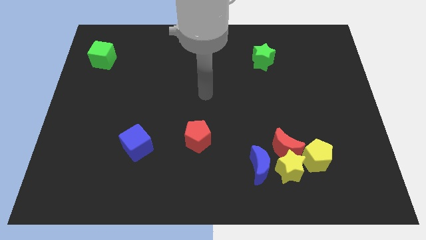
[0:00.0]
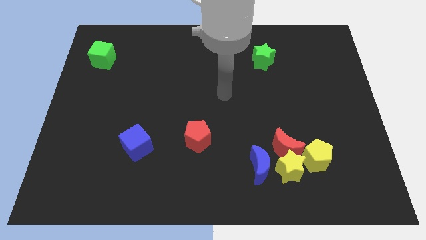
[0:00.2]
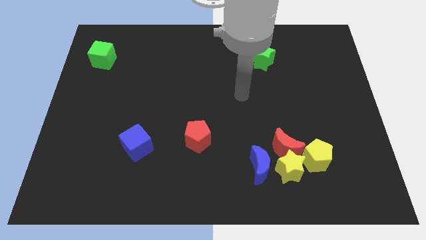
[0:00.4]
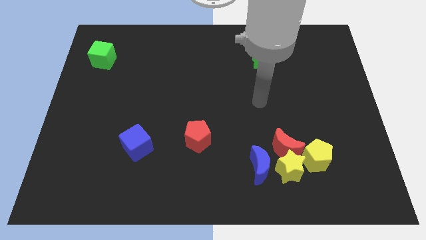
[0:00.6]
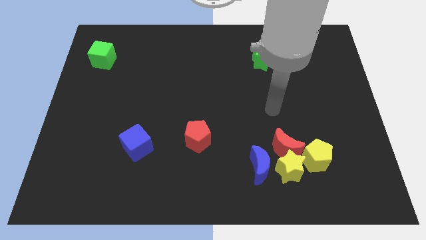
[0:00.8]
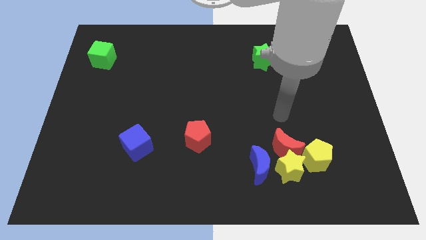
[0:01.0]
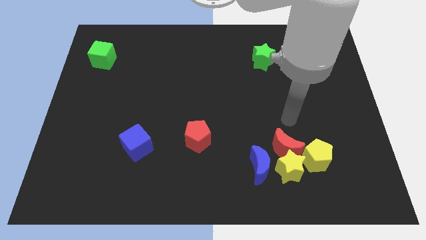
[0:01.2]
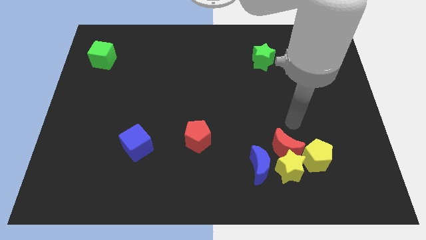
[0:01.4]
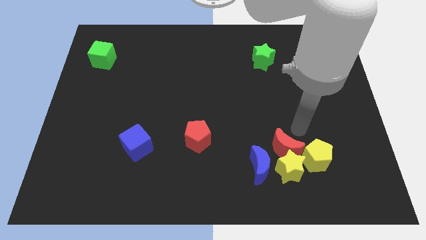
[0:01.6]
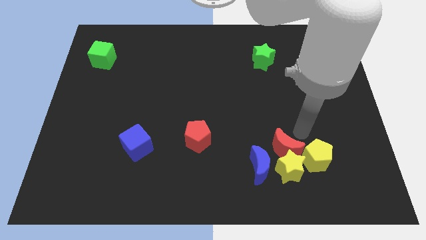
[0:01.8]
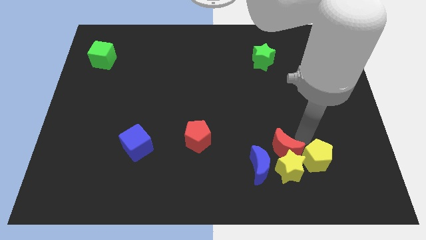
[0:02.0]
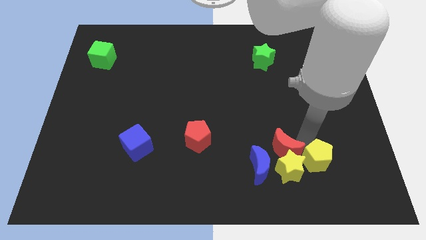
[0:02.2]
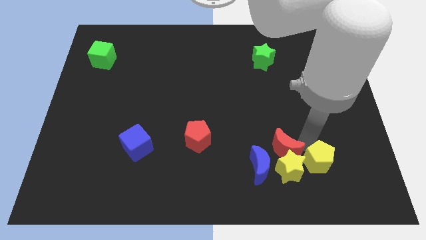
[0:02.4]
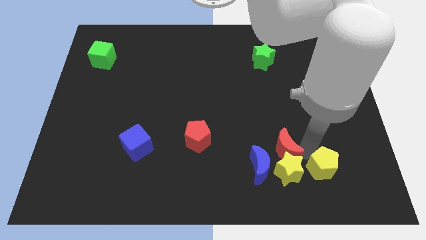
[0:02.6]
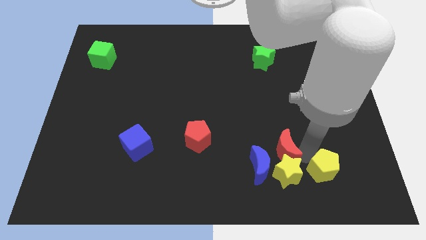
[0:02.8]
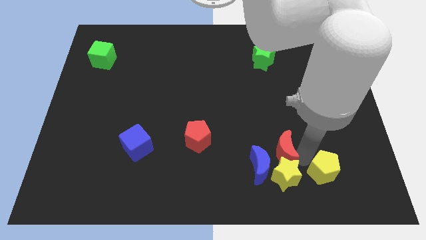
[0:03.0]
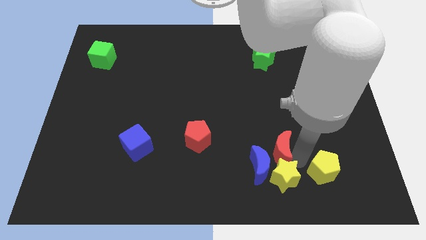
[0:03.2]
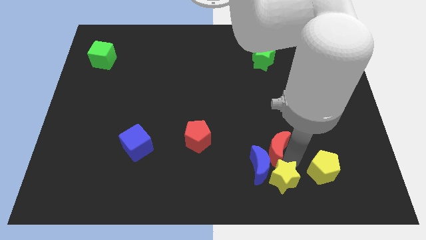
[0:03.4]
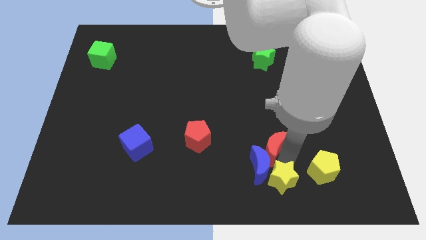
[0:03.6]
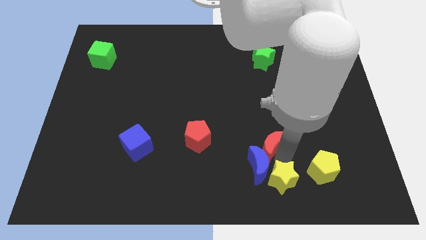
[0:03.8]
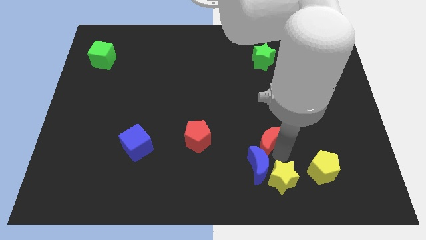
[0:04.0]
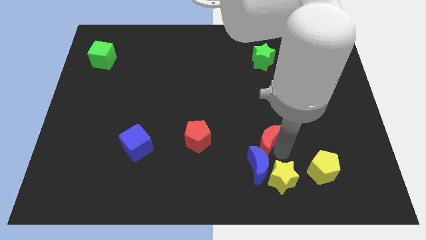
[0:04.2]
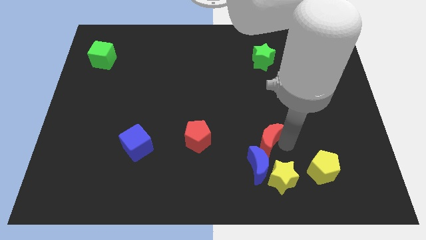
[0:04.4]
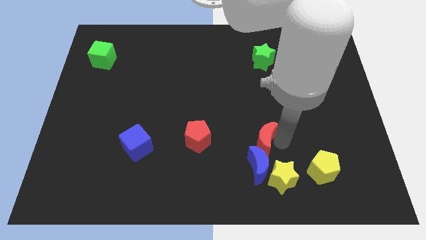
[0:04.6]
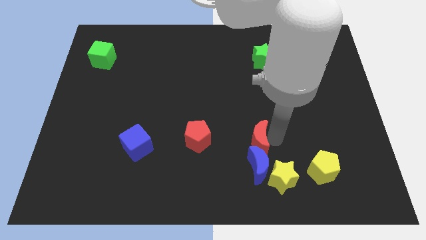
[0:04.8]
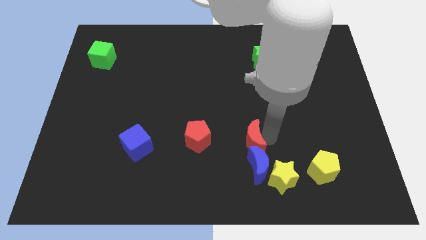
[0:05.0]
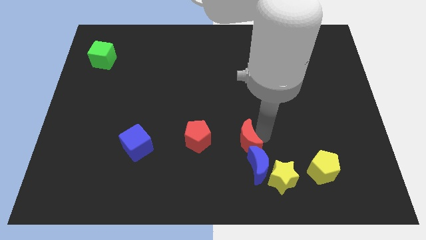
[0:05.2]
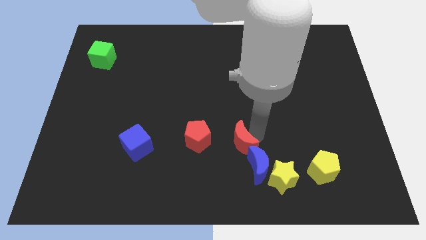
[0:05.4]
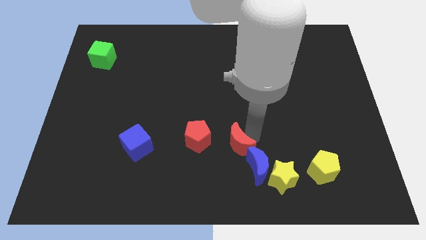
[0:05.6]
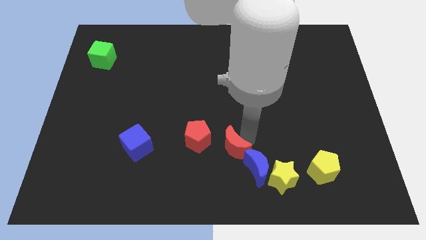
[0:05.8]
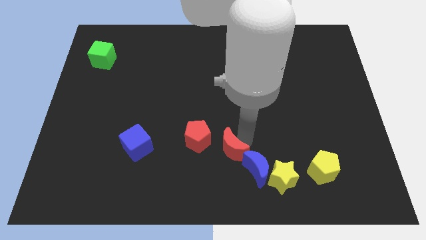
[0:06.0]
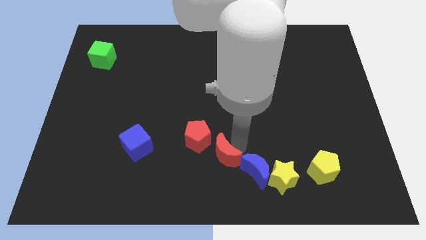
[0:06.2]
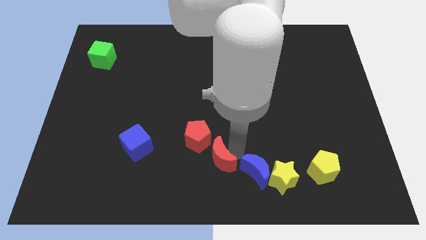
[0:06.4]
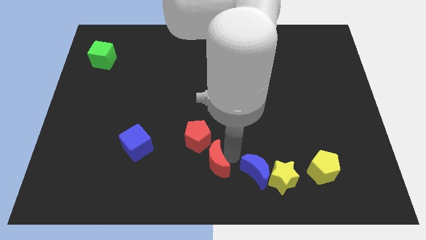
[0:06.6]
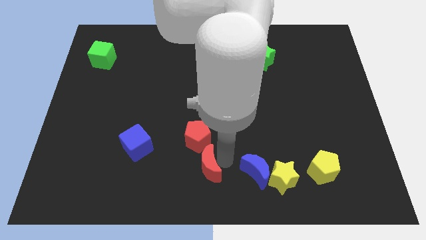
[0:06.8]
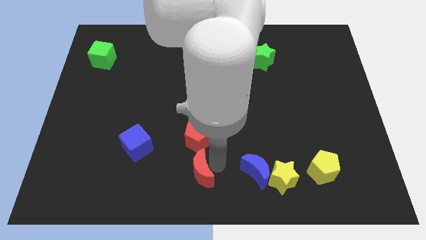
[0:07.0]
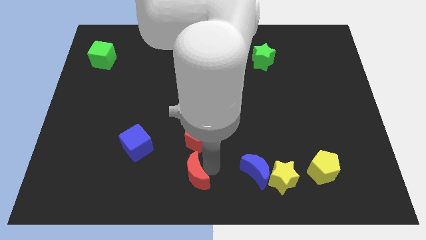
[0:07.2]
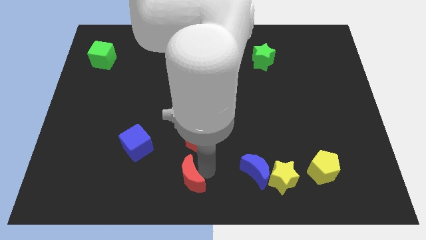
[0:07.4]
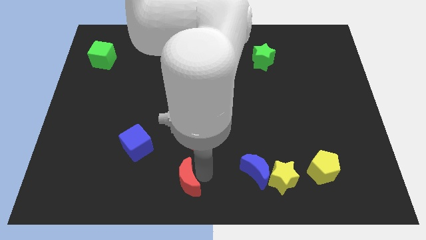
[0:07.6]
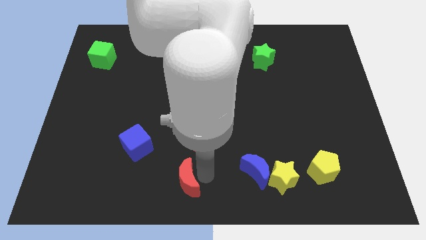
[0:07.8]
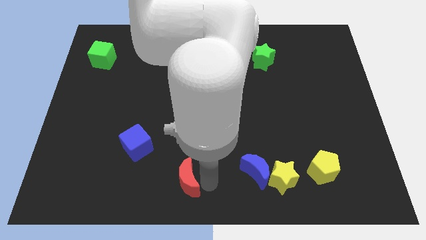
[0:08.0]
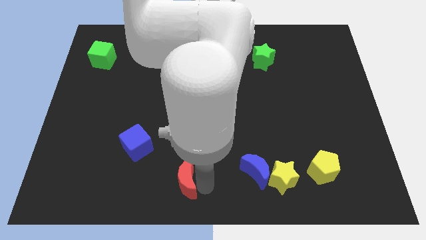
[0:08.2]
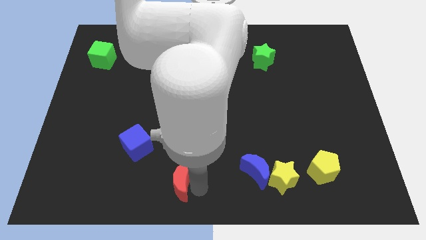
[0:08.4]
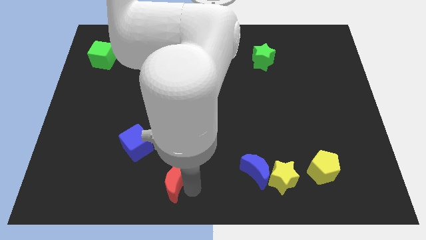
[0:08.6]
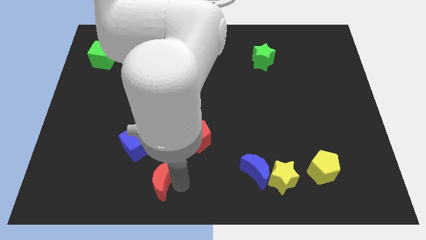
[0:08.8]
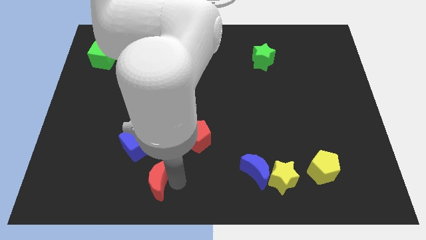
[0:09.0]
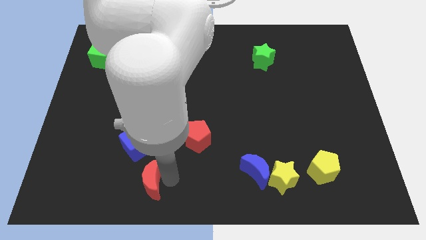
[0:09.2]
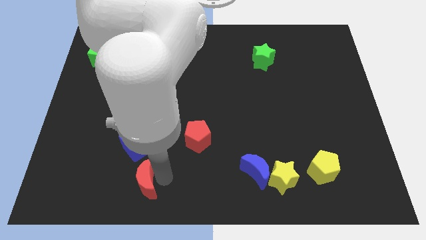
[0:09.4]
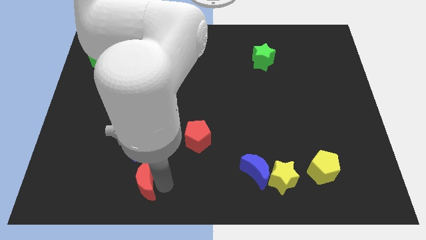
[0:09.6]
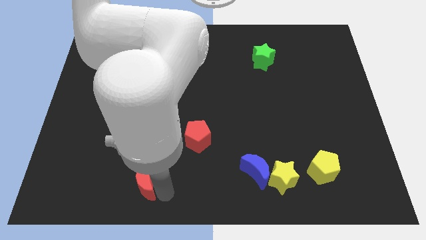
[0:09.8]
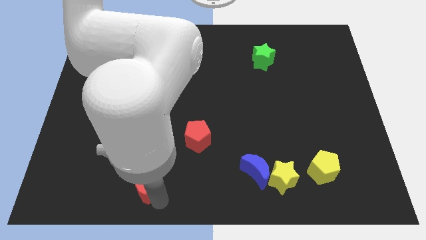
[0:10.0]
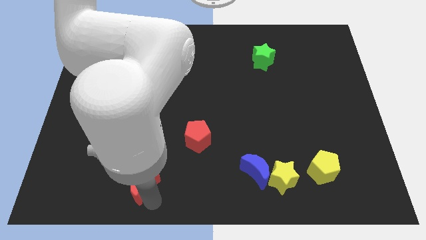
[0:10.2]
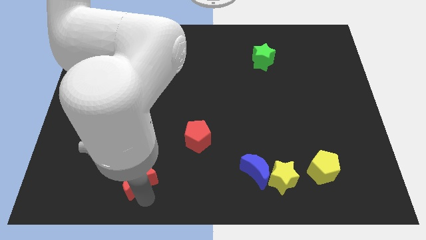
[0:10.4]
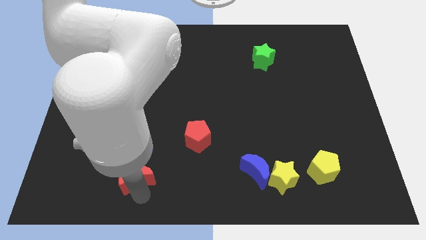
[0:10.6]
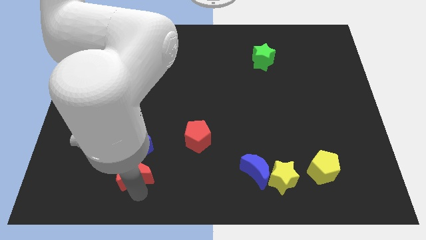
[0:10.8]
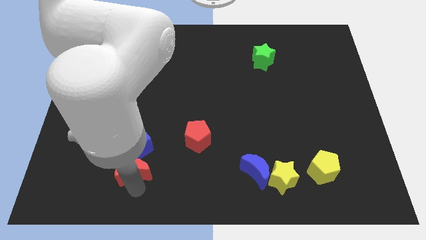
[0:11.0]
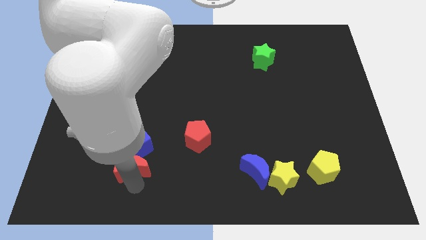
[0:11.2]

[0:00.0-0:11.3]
slide the red moon close to the blue cube

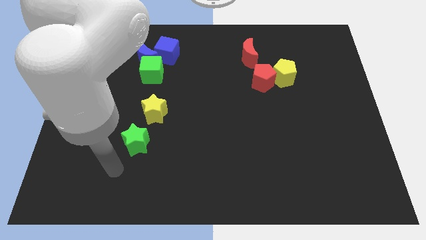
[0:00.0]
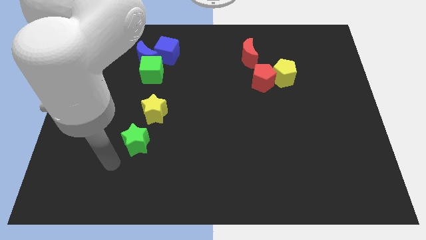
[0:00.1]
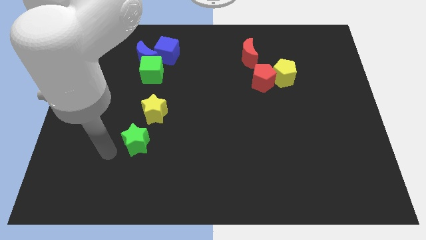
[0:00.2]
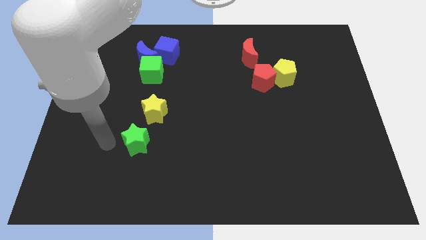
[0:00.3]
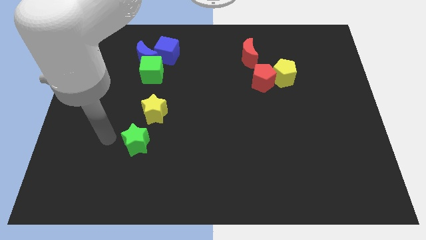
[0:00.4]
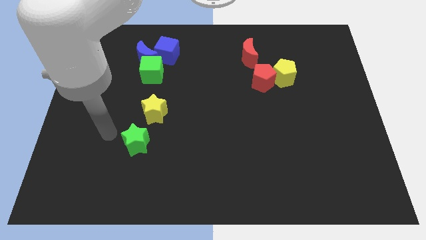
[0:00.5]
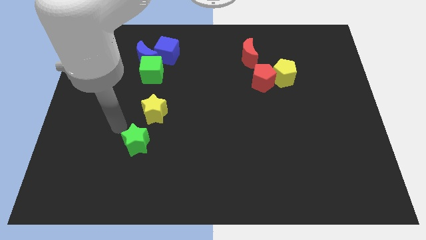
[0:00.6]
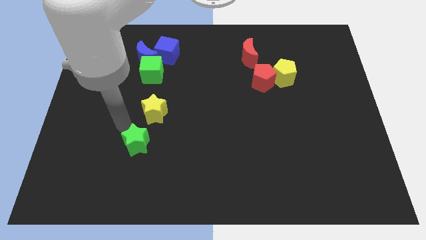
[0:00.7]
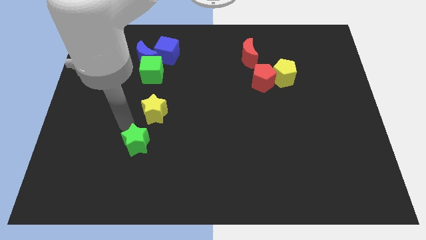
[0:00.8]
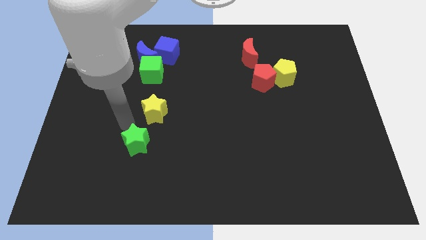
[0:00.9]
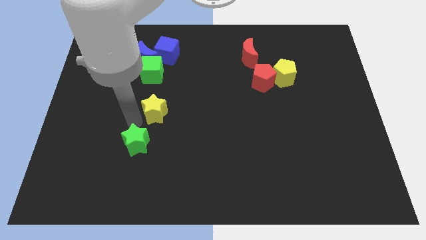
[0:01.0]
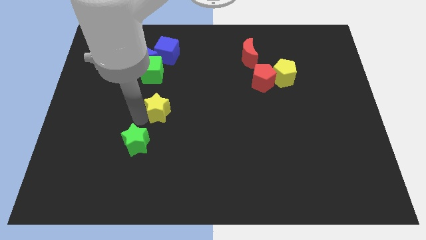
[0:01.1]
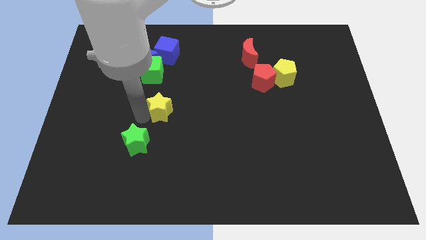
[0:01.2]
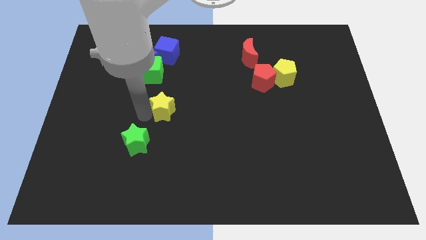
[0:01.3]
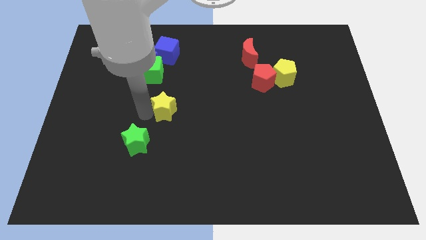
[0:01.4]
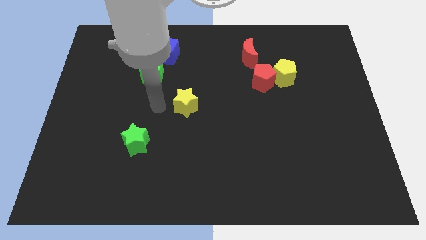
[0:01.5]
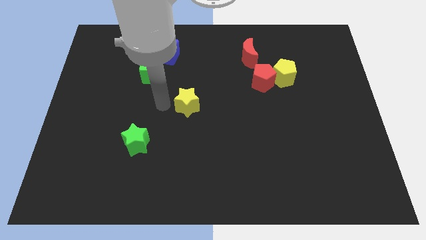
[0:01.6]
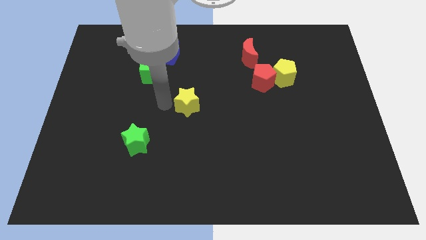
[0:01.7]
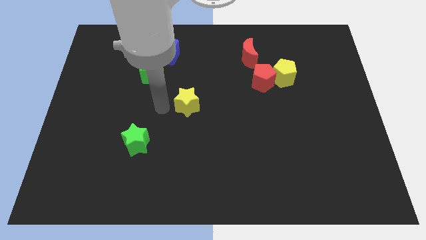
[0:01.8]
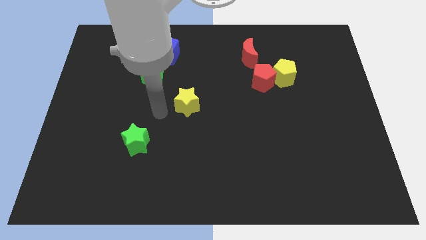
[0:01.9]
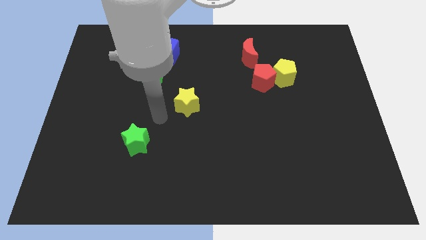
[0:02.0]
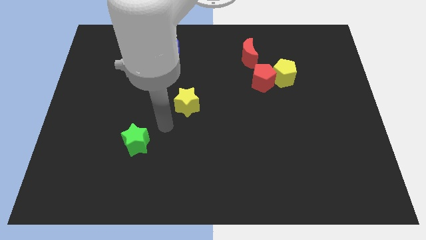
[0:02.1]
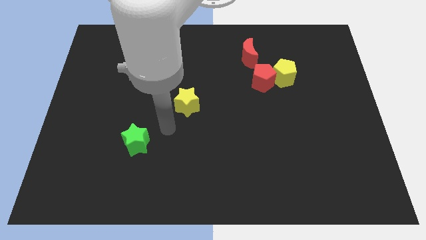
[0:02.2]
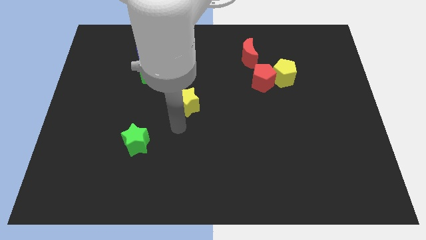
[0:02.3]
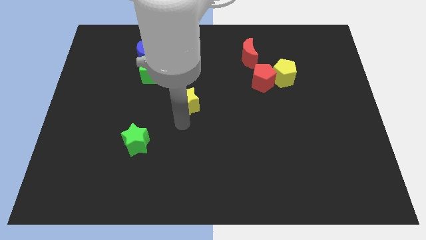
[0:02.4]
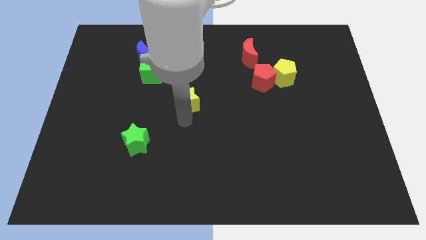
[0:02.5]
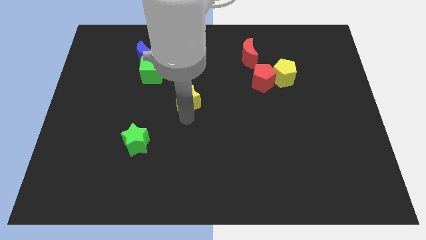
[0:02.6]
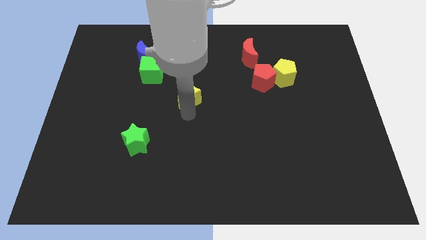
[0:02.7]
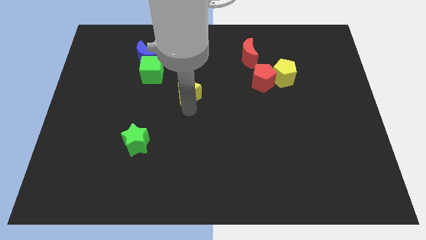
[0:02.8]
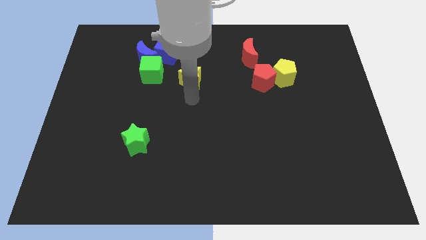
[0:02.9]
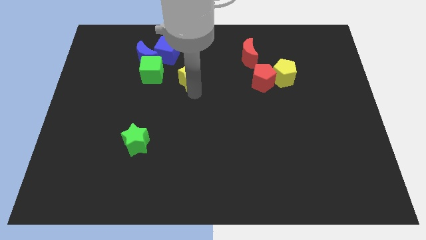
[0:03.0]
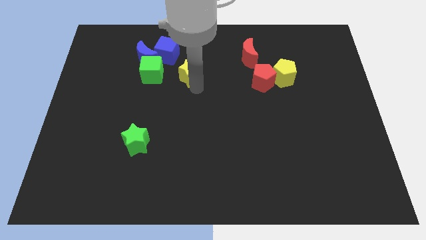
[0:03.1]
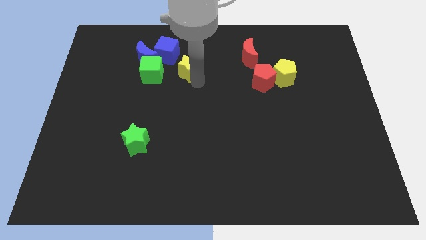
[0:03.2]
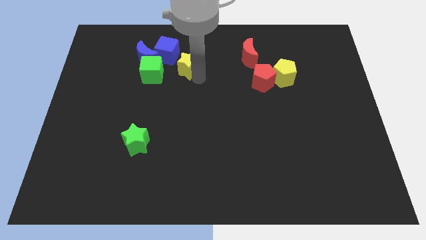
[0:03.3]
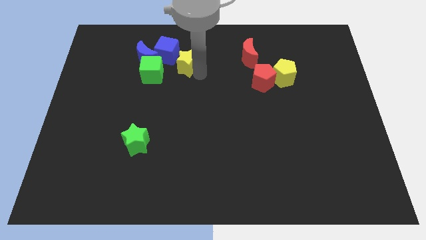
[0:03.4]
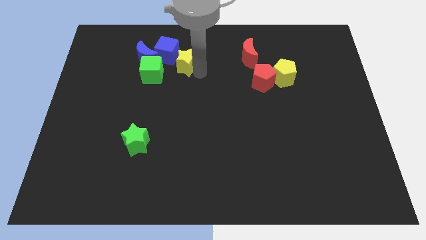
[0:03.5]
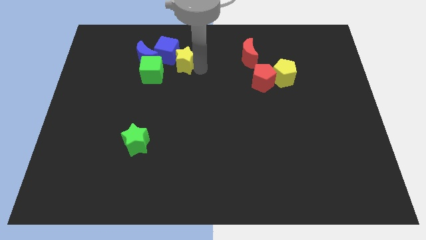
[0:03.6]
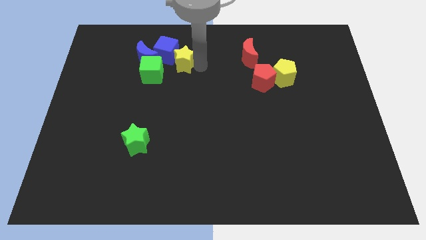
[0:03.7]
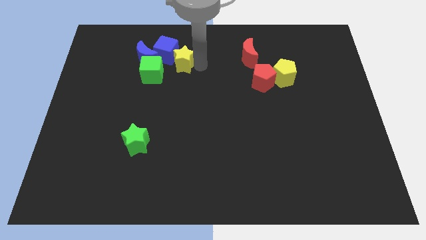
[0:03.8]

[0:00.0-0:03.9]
put the yellow star to the blue cube
